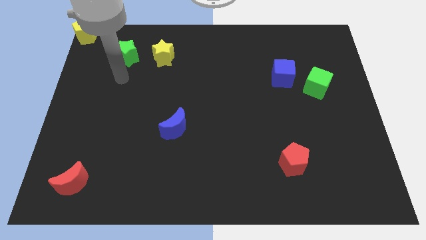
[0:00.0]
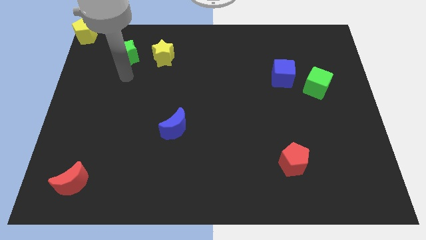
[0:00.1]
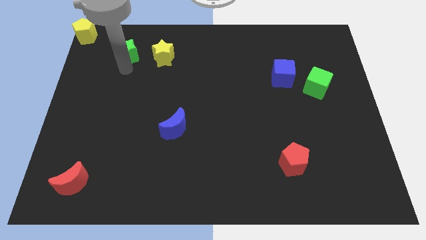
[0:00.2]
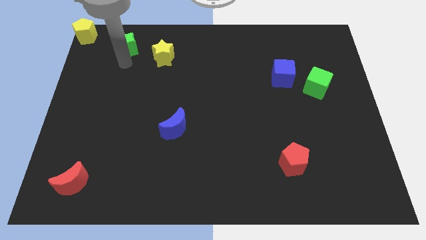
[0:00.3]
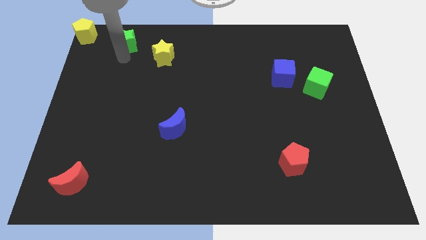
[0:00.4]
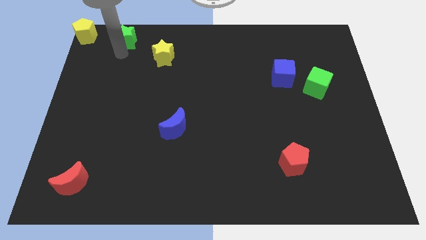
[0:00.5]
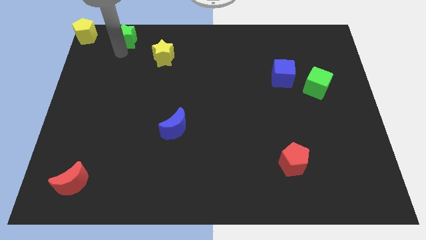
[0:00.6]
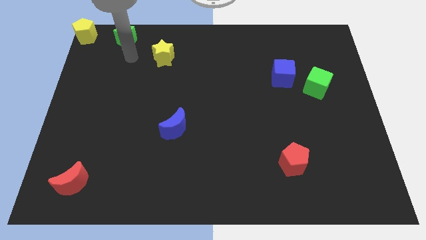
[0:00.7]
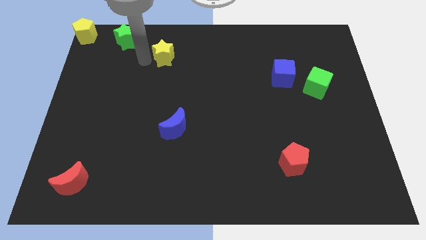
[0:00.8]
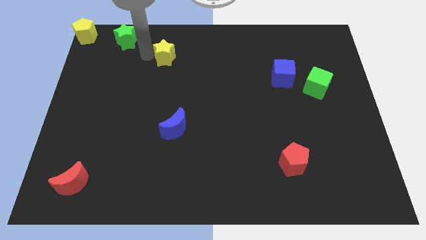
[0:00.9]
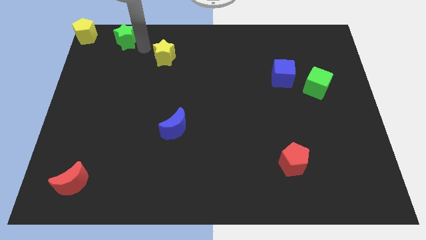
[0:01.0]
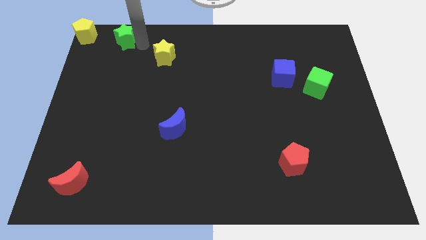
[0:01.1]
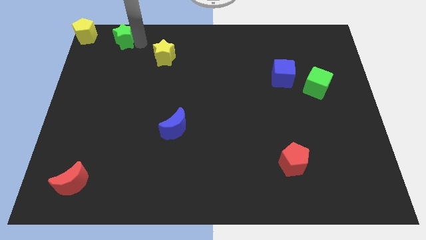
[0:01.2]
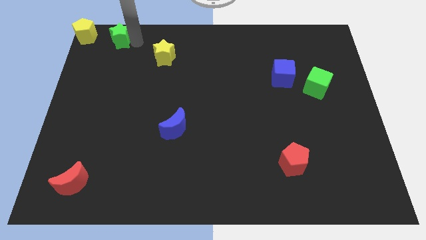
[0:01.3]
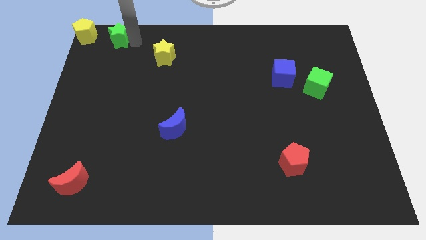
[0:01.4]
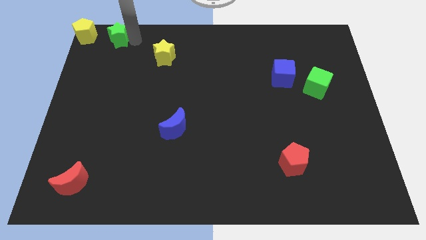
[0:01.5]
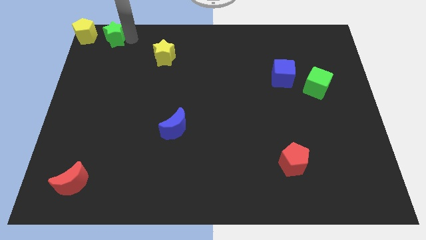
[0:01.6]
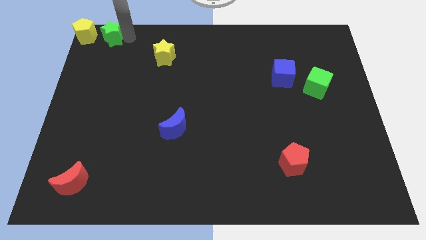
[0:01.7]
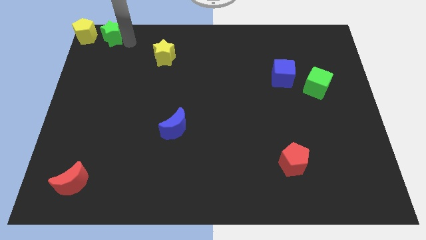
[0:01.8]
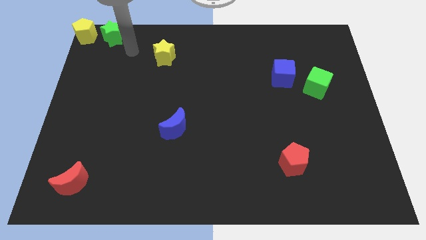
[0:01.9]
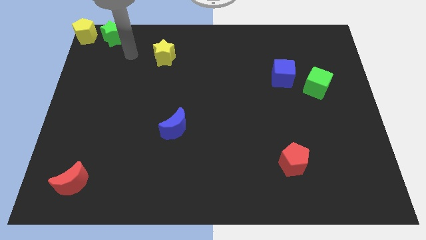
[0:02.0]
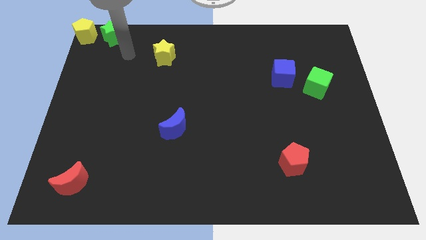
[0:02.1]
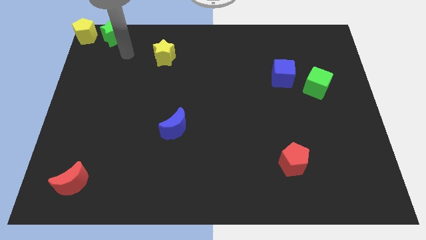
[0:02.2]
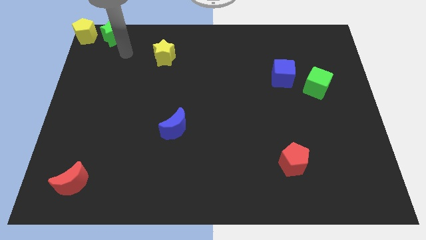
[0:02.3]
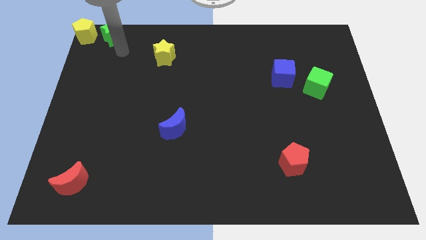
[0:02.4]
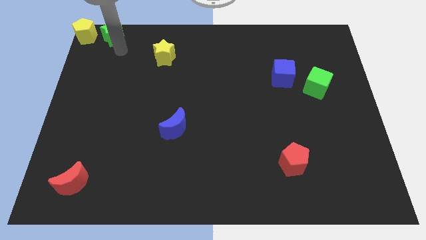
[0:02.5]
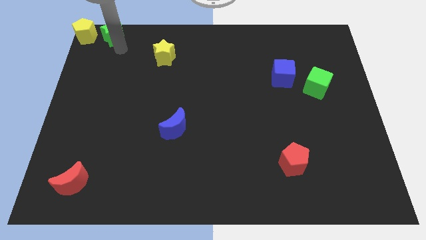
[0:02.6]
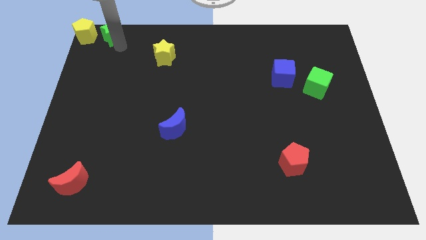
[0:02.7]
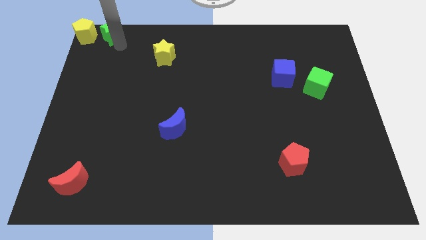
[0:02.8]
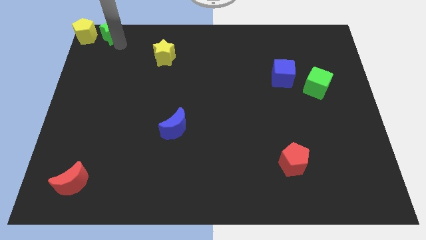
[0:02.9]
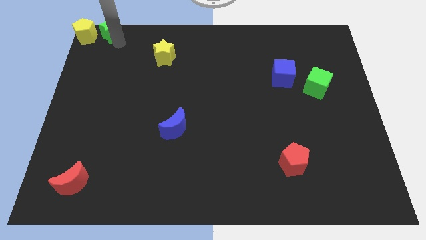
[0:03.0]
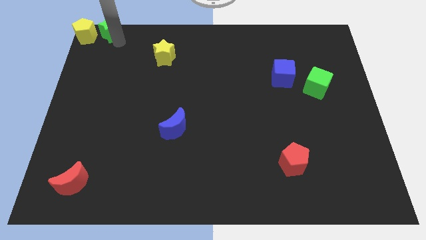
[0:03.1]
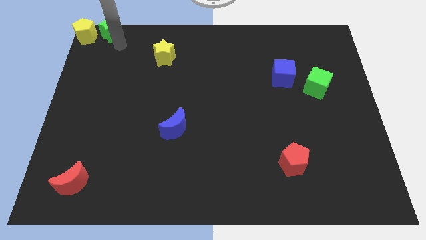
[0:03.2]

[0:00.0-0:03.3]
push the green star right to the yellow pentagon

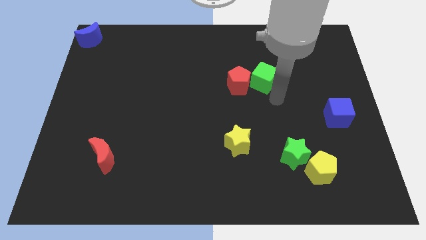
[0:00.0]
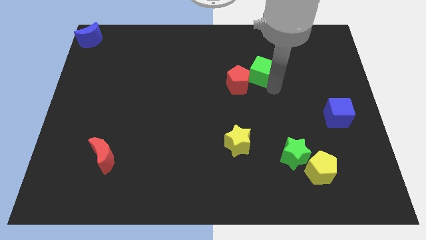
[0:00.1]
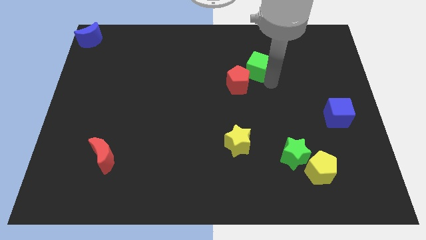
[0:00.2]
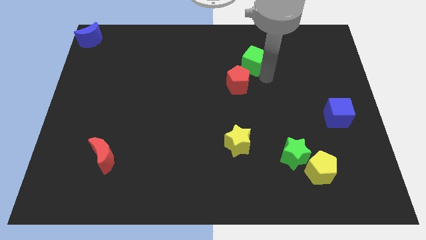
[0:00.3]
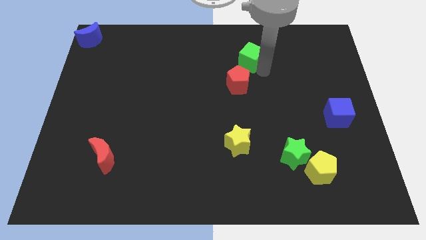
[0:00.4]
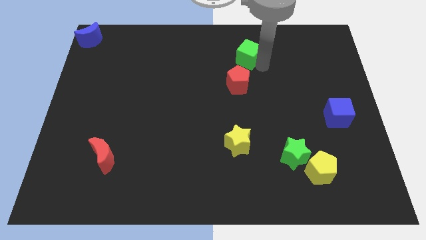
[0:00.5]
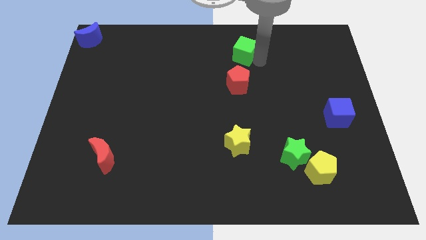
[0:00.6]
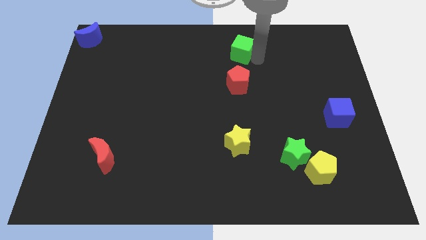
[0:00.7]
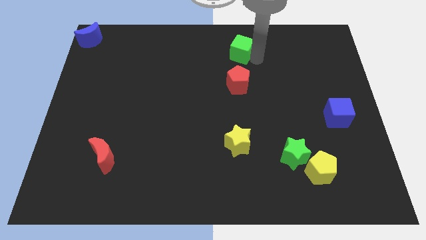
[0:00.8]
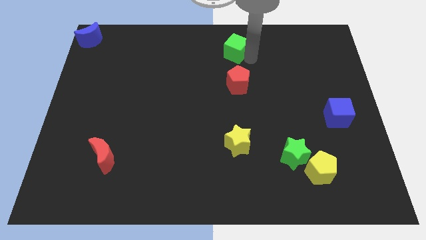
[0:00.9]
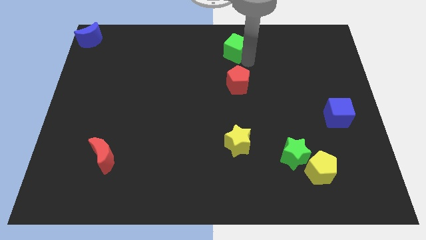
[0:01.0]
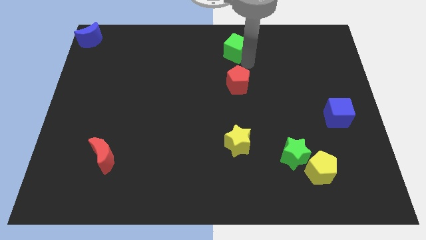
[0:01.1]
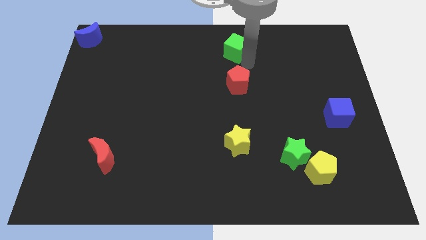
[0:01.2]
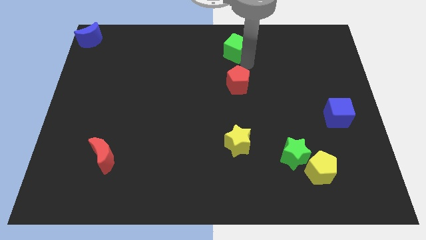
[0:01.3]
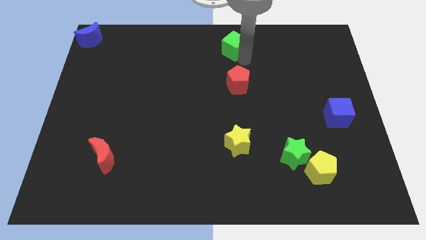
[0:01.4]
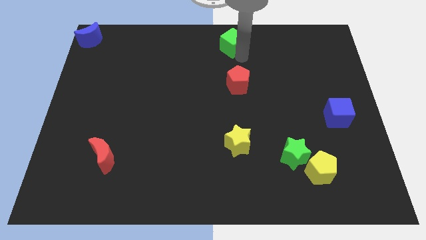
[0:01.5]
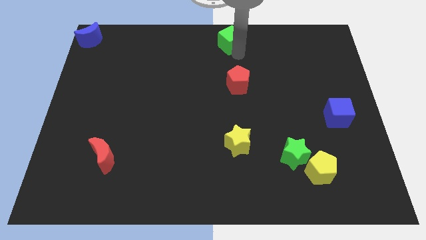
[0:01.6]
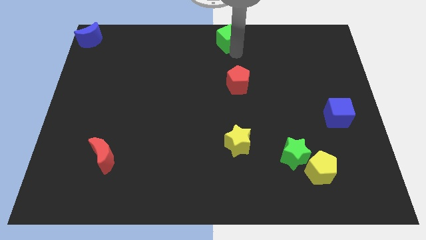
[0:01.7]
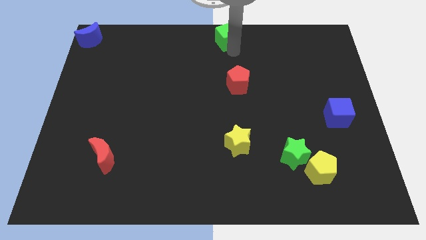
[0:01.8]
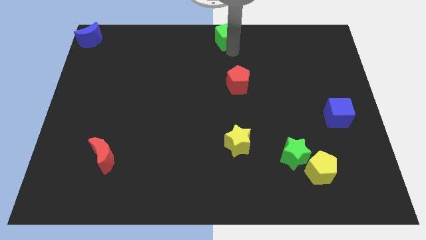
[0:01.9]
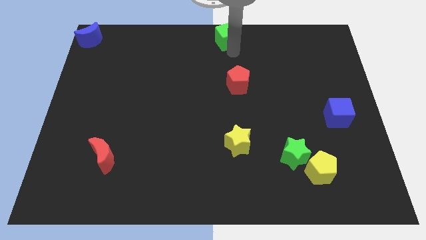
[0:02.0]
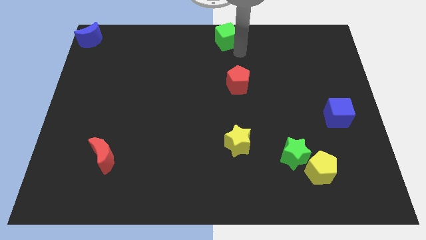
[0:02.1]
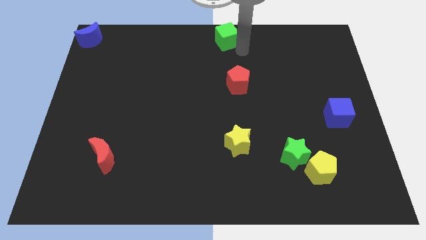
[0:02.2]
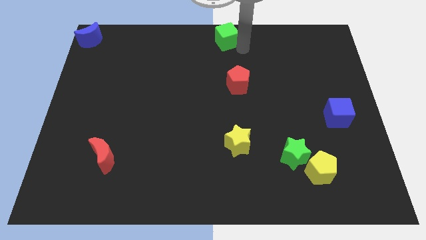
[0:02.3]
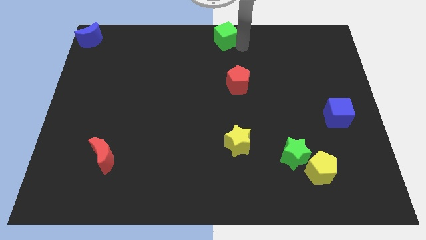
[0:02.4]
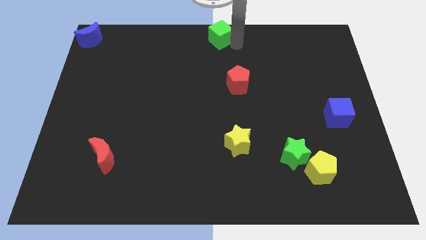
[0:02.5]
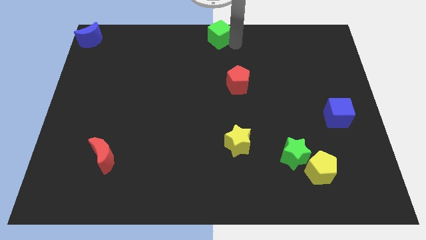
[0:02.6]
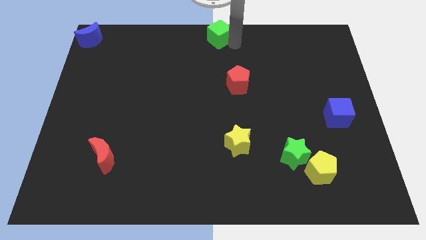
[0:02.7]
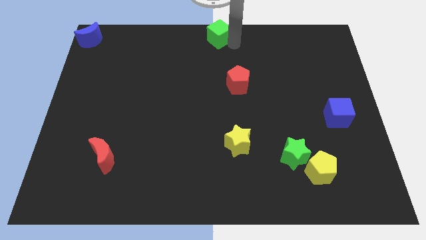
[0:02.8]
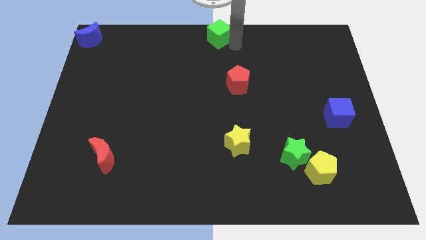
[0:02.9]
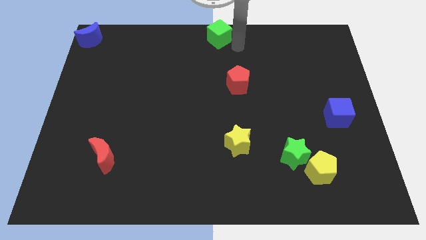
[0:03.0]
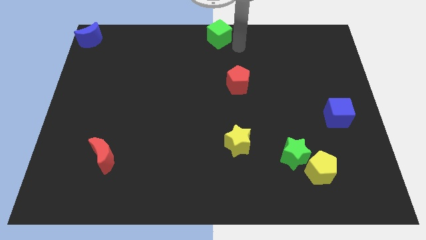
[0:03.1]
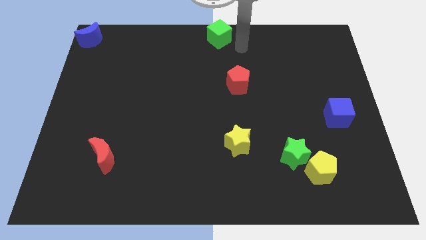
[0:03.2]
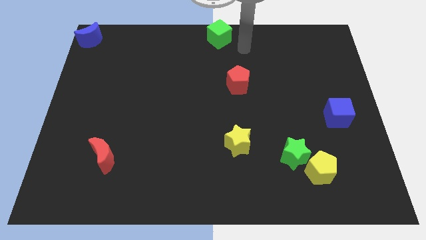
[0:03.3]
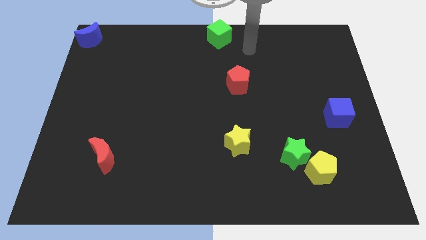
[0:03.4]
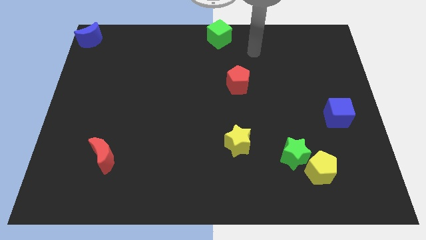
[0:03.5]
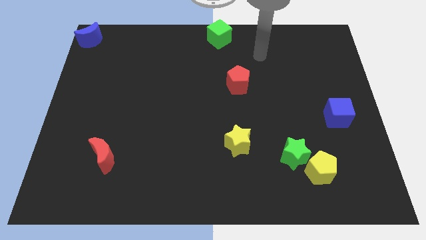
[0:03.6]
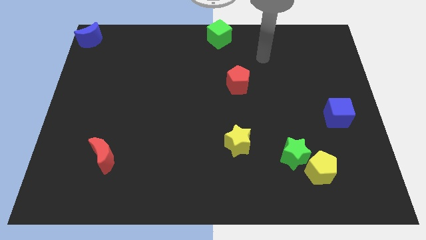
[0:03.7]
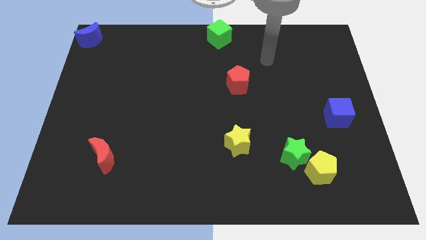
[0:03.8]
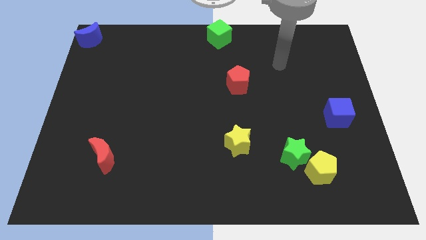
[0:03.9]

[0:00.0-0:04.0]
place the green cube at the top center

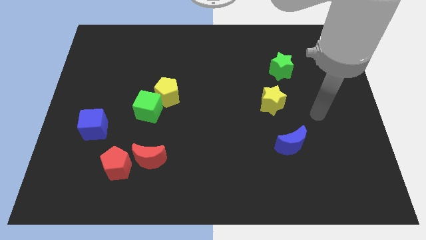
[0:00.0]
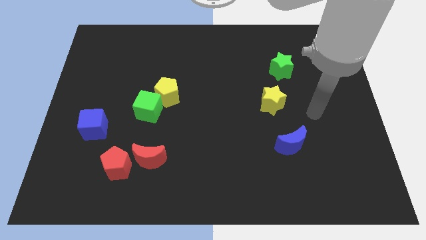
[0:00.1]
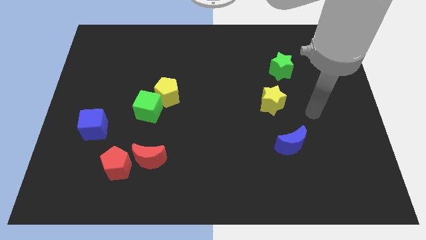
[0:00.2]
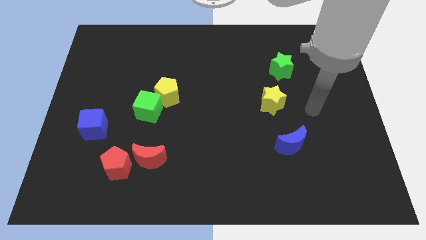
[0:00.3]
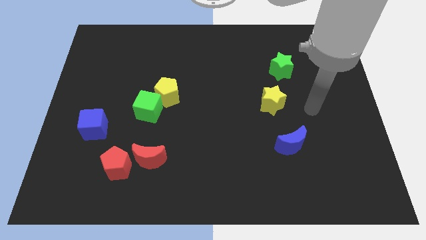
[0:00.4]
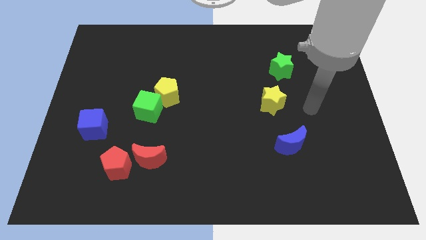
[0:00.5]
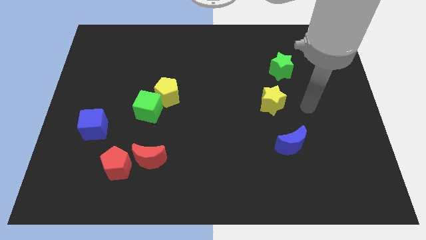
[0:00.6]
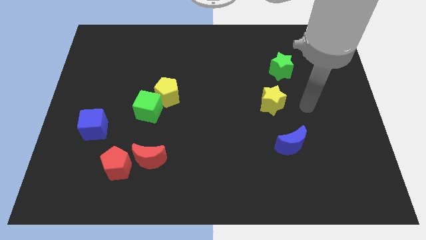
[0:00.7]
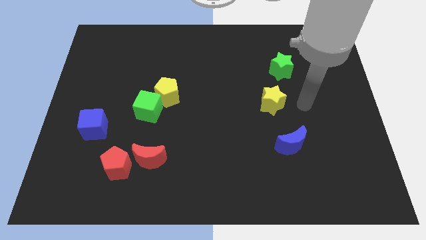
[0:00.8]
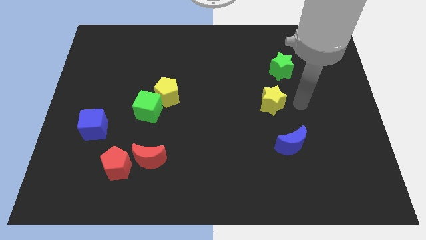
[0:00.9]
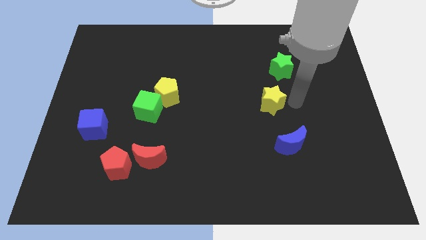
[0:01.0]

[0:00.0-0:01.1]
point your arm at the right of the yellow star

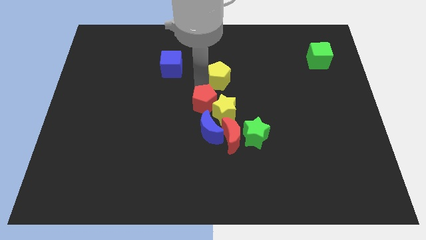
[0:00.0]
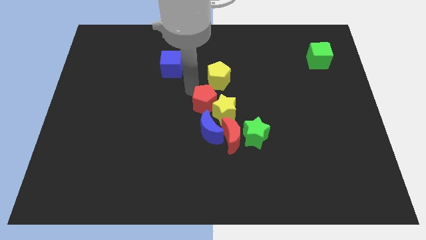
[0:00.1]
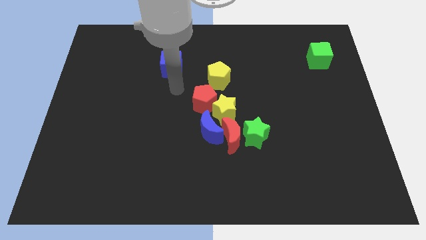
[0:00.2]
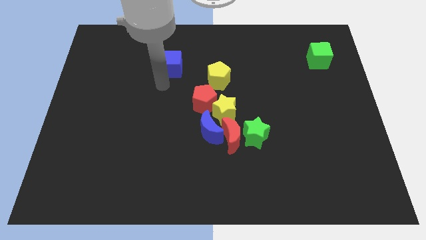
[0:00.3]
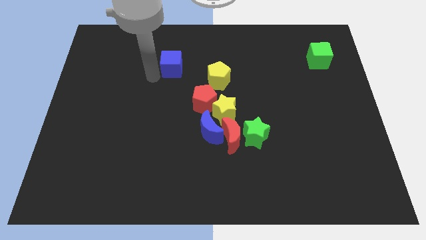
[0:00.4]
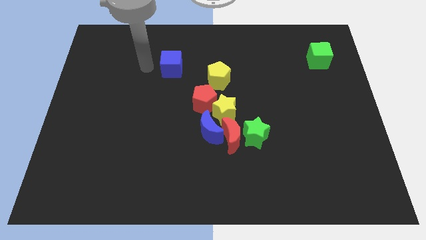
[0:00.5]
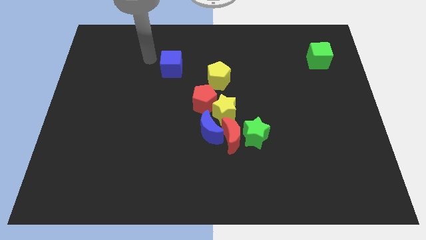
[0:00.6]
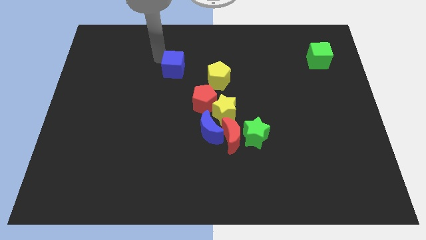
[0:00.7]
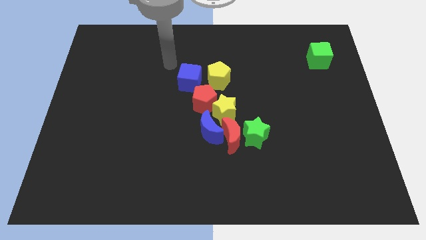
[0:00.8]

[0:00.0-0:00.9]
place blue cube to the left of yellow pentagon
